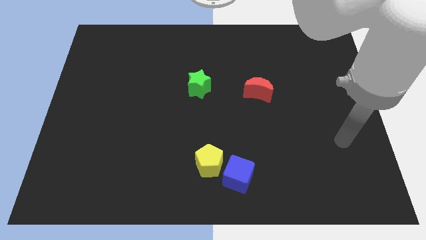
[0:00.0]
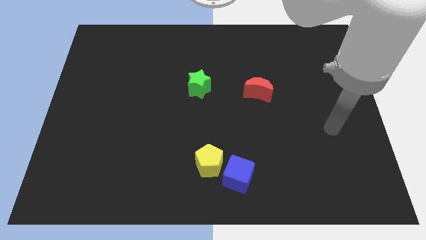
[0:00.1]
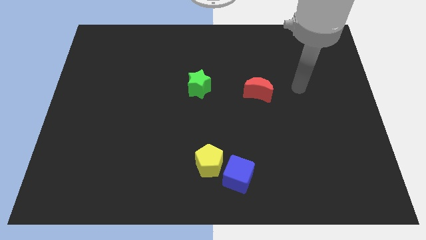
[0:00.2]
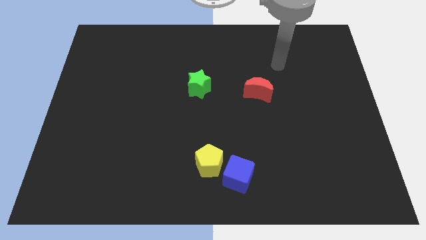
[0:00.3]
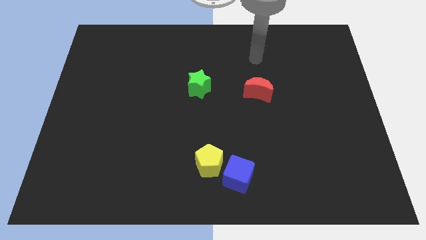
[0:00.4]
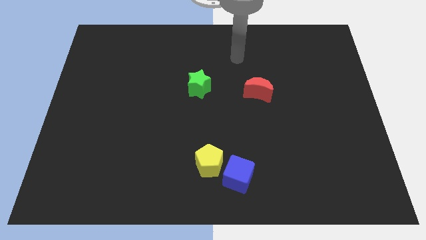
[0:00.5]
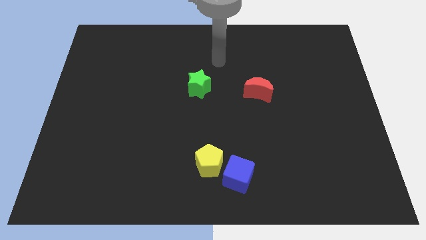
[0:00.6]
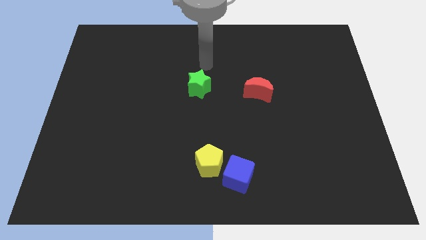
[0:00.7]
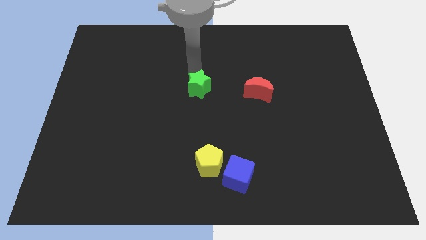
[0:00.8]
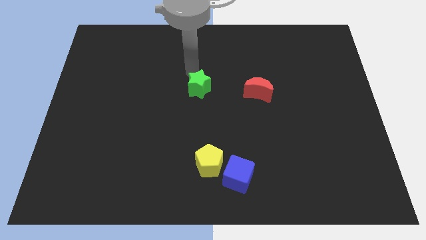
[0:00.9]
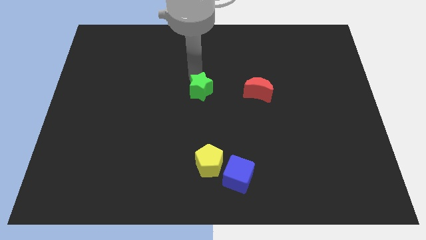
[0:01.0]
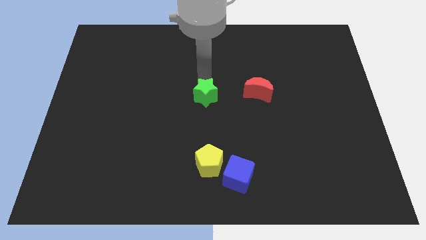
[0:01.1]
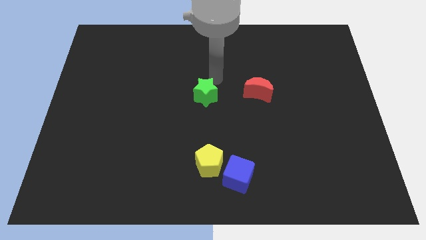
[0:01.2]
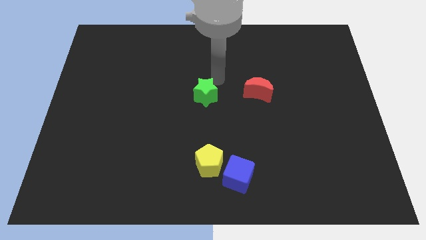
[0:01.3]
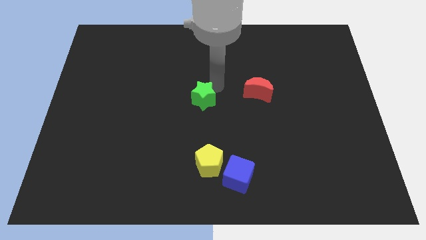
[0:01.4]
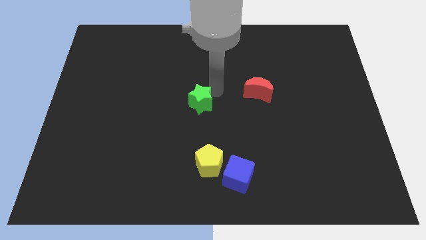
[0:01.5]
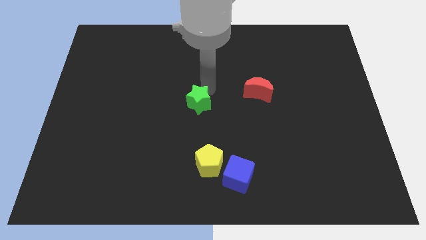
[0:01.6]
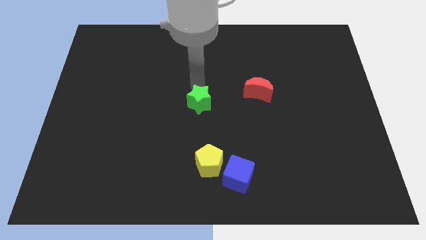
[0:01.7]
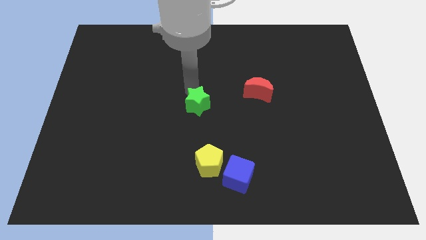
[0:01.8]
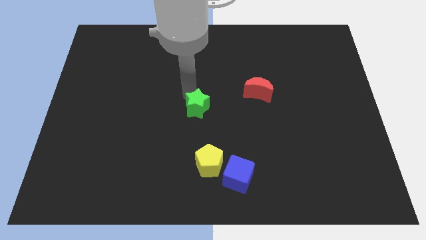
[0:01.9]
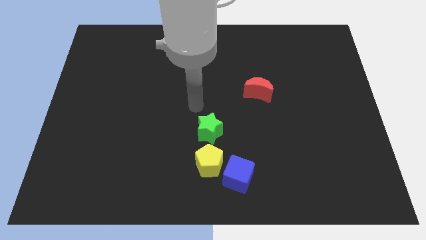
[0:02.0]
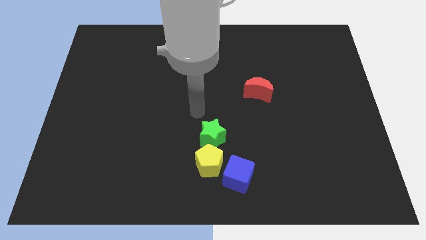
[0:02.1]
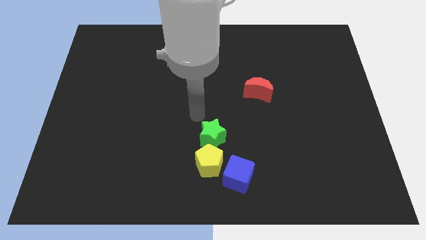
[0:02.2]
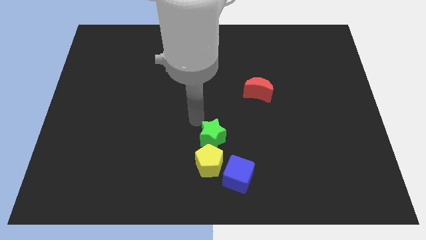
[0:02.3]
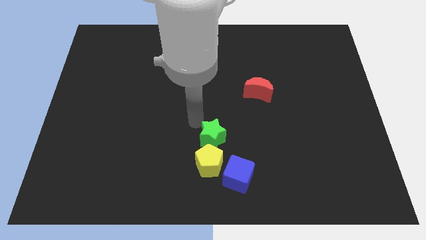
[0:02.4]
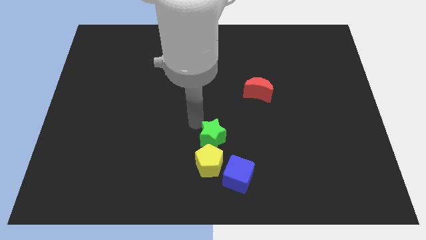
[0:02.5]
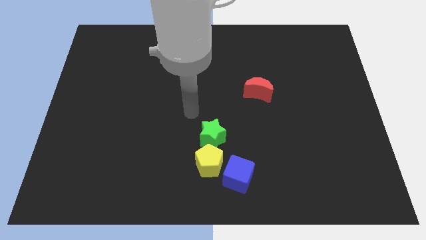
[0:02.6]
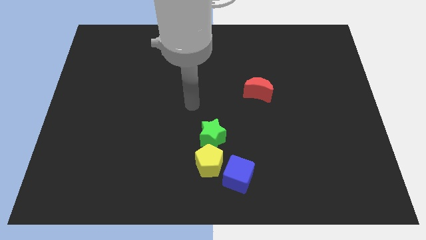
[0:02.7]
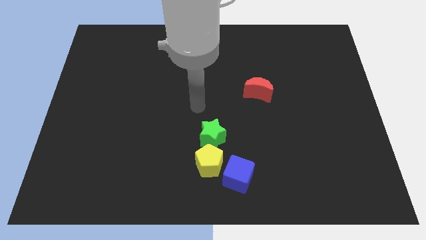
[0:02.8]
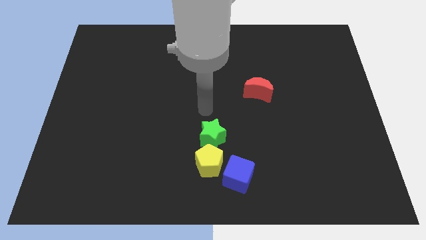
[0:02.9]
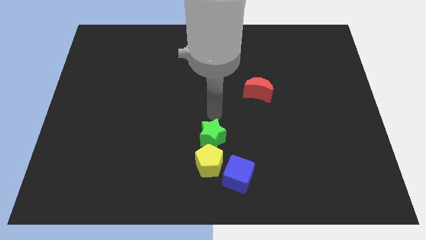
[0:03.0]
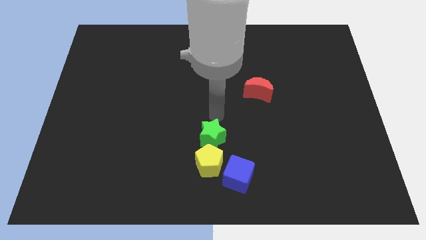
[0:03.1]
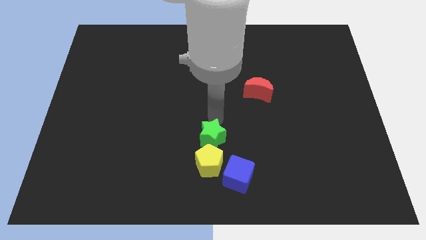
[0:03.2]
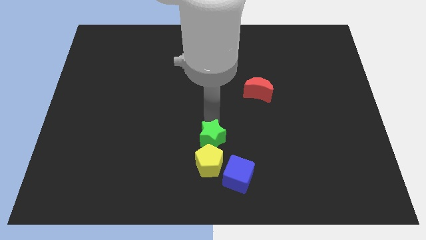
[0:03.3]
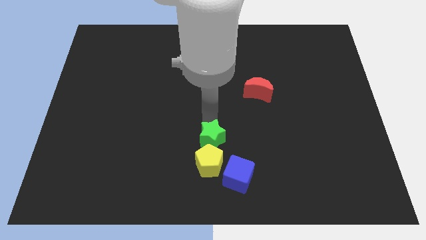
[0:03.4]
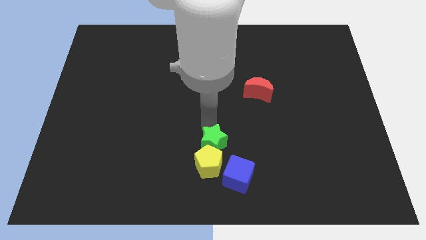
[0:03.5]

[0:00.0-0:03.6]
move the green block to the yellow block

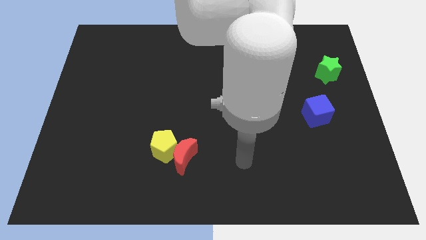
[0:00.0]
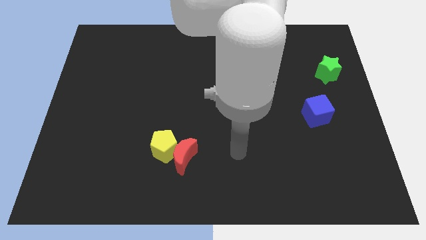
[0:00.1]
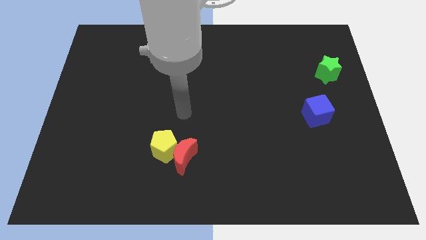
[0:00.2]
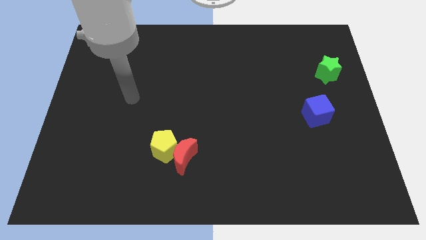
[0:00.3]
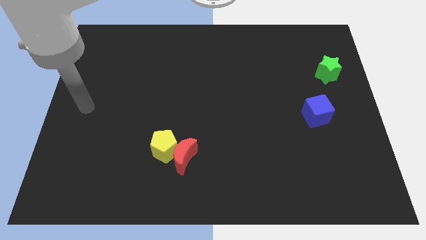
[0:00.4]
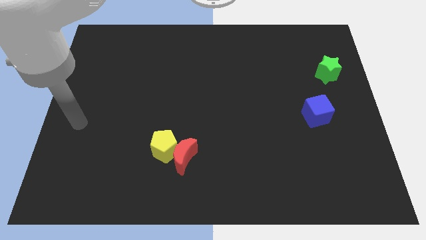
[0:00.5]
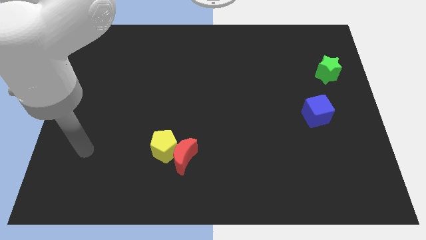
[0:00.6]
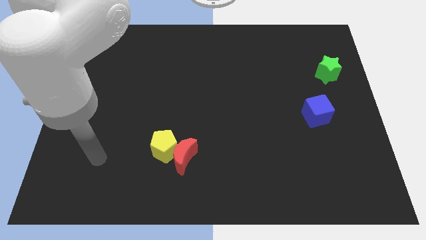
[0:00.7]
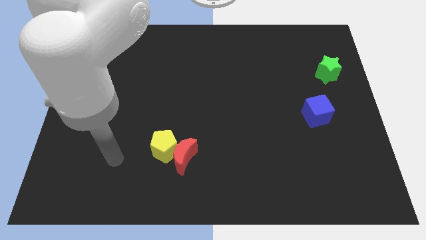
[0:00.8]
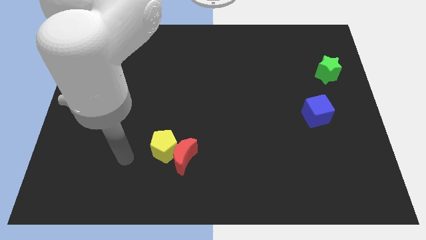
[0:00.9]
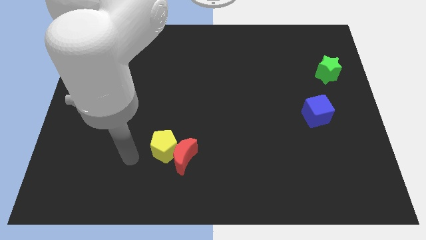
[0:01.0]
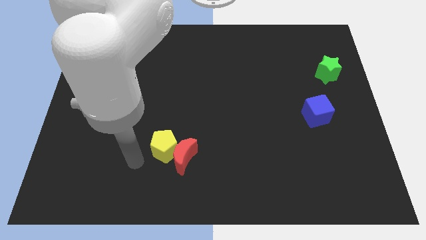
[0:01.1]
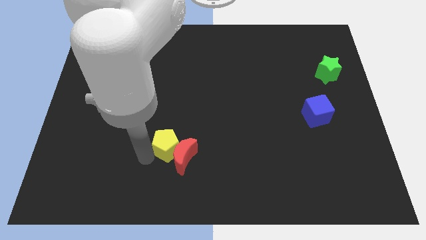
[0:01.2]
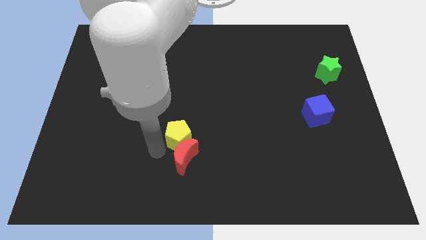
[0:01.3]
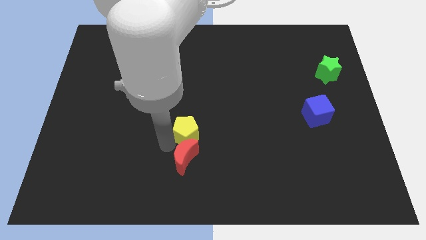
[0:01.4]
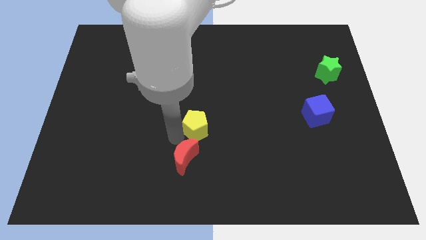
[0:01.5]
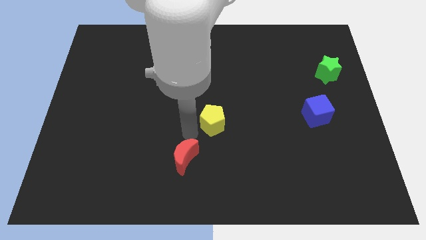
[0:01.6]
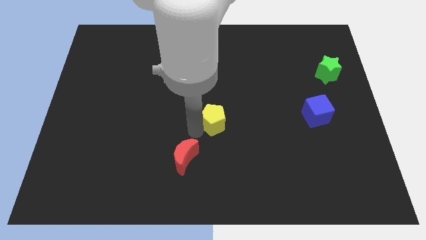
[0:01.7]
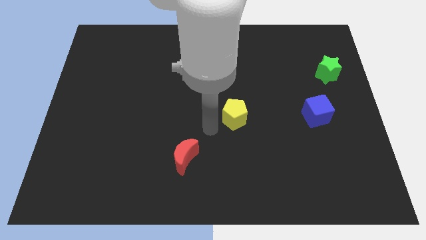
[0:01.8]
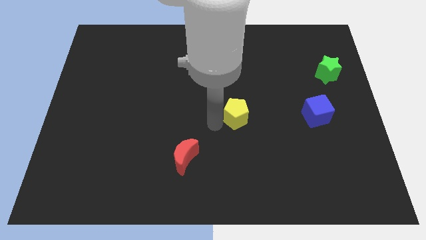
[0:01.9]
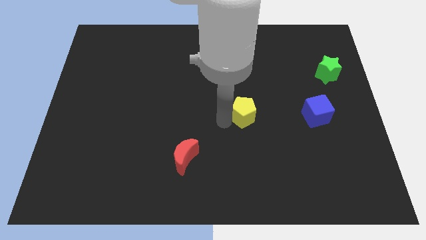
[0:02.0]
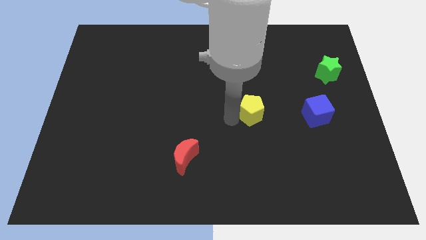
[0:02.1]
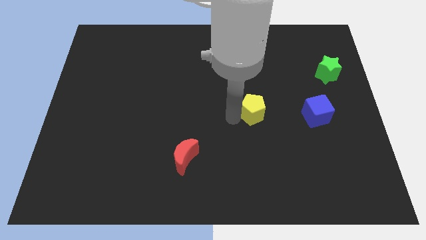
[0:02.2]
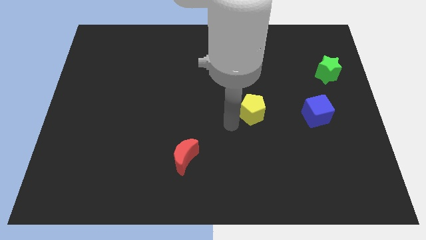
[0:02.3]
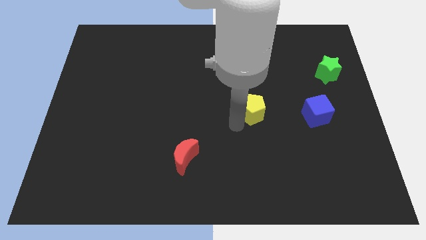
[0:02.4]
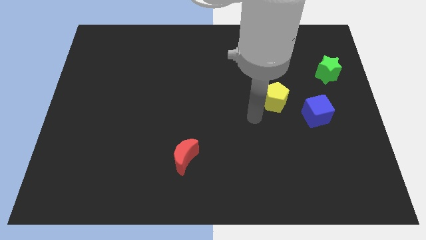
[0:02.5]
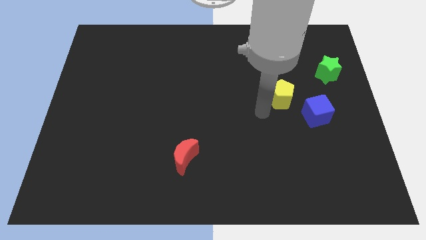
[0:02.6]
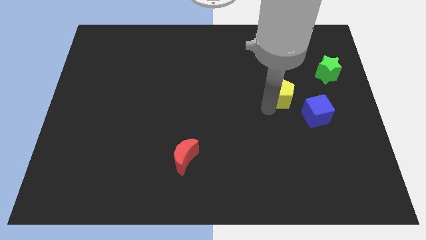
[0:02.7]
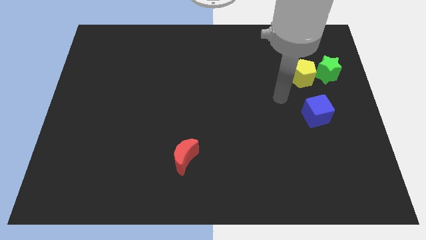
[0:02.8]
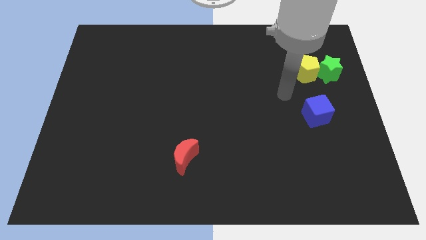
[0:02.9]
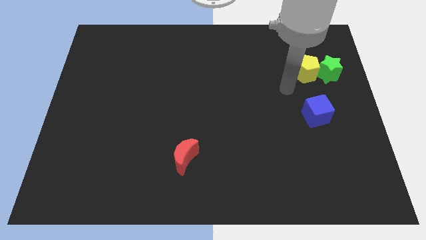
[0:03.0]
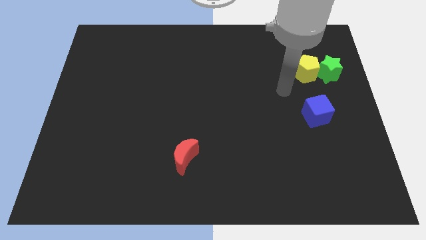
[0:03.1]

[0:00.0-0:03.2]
slide the pentagon to the green block

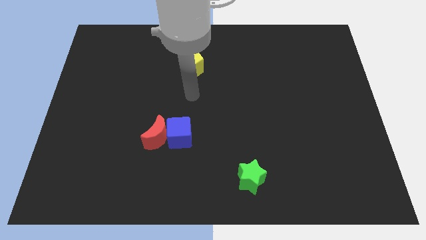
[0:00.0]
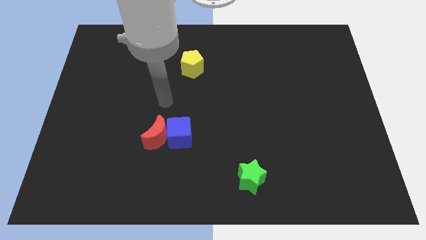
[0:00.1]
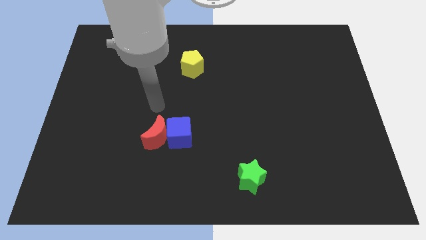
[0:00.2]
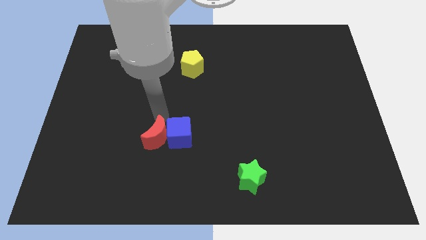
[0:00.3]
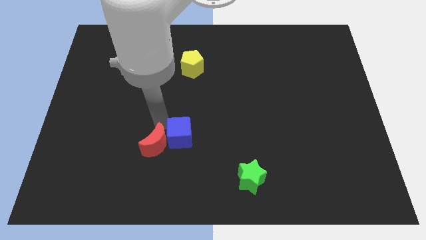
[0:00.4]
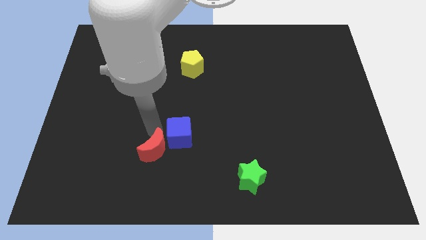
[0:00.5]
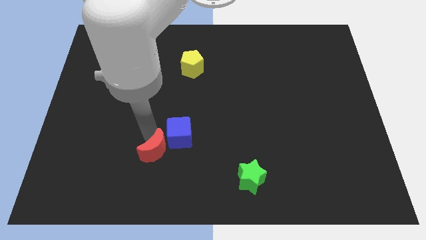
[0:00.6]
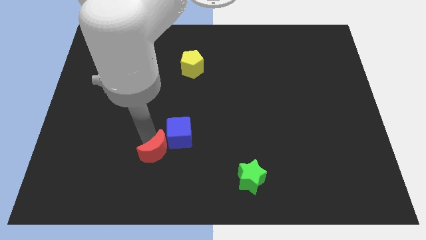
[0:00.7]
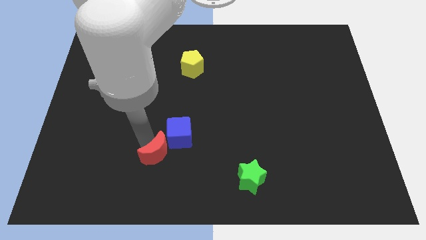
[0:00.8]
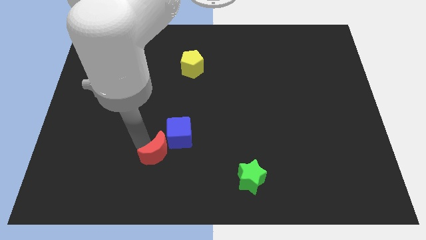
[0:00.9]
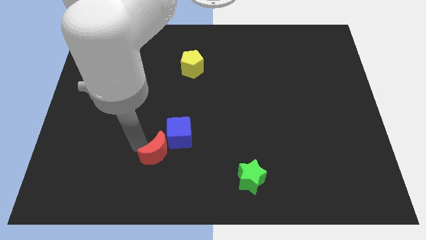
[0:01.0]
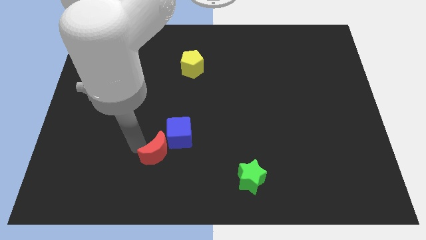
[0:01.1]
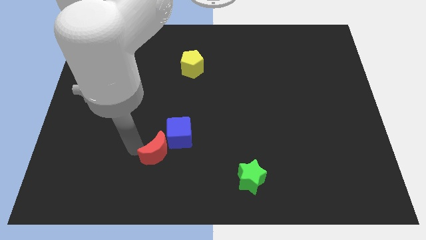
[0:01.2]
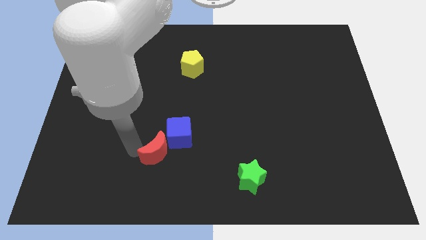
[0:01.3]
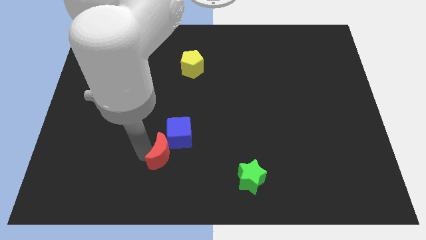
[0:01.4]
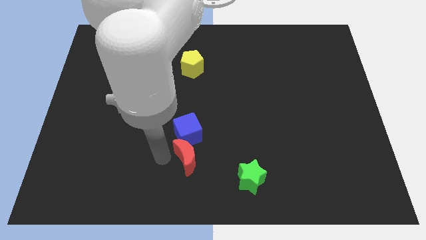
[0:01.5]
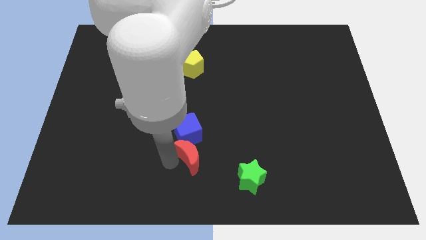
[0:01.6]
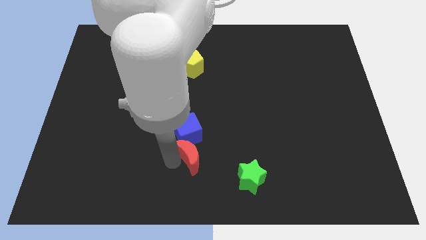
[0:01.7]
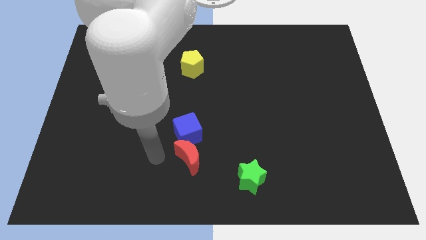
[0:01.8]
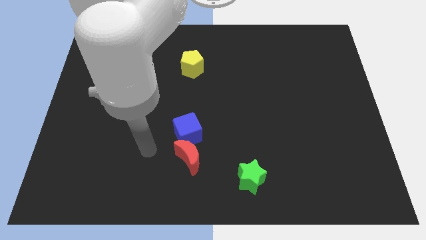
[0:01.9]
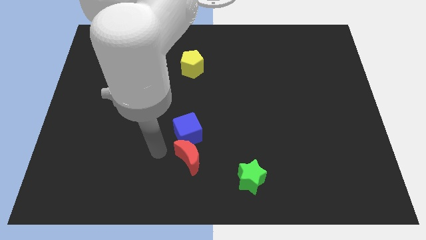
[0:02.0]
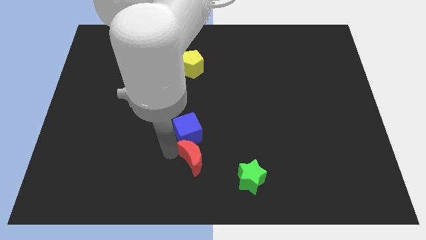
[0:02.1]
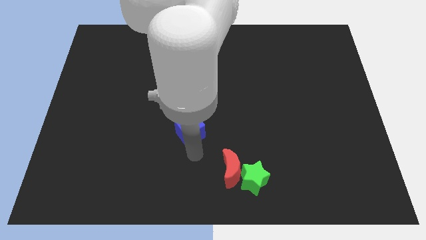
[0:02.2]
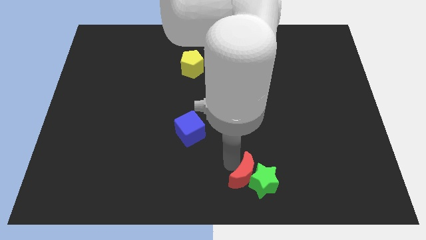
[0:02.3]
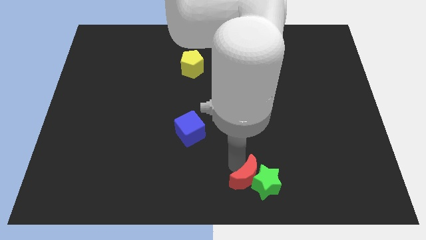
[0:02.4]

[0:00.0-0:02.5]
slide the moon to the green star
